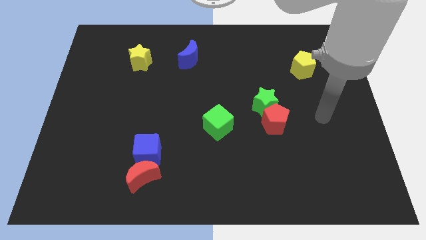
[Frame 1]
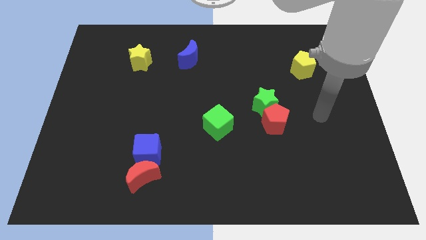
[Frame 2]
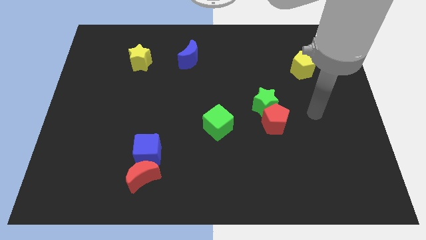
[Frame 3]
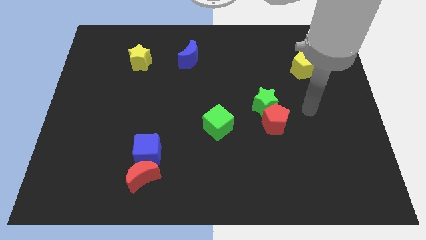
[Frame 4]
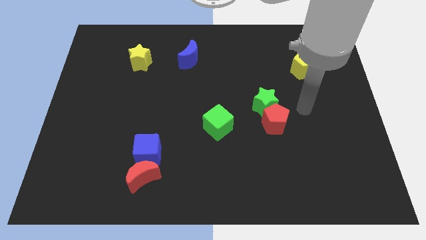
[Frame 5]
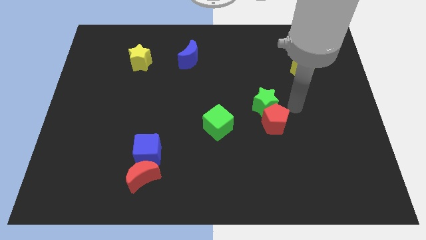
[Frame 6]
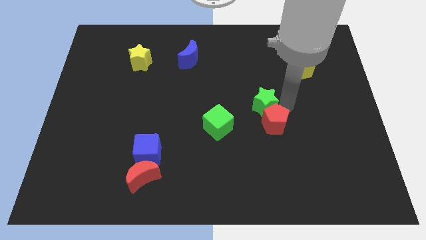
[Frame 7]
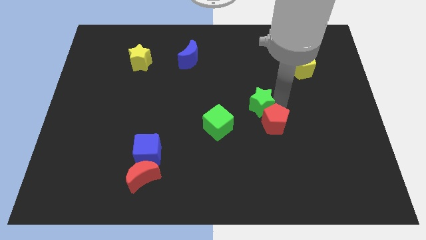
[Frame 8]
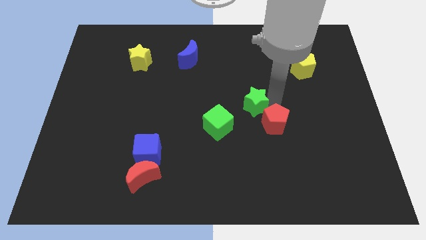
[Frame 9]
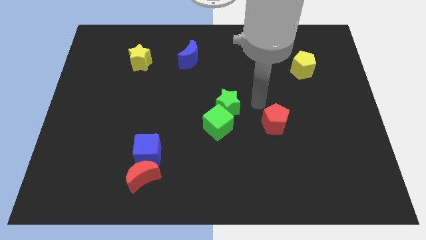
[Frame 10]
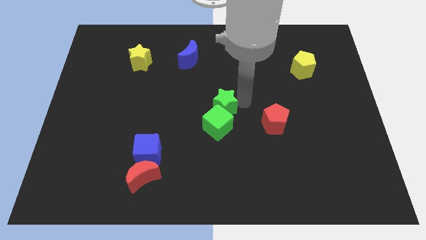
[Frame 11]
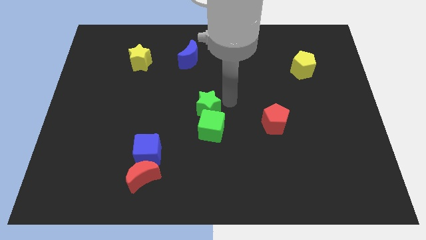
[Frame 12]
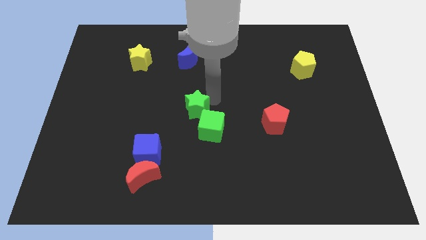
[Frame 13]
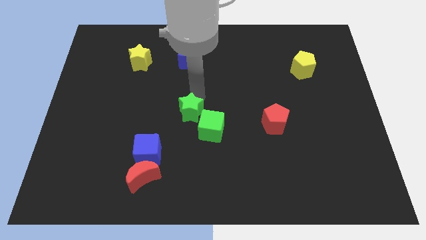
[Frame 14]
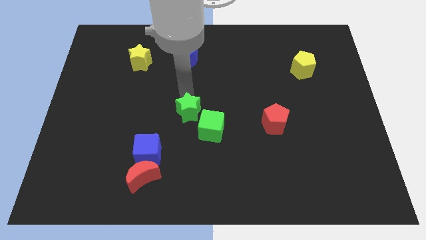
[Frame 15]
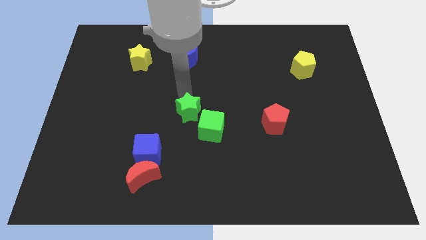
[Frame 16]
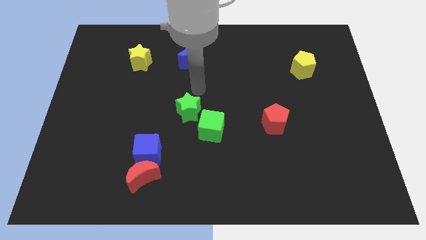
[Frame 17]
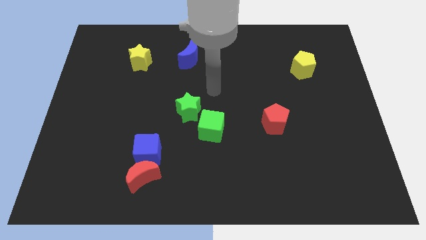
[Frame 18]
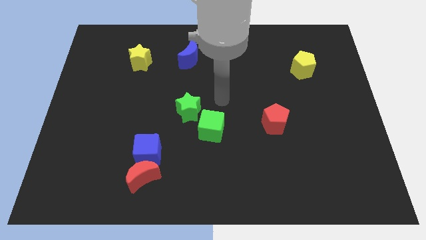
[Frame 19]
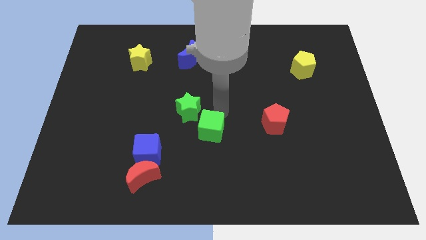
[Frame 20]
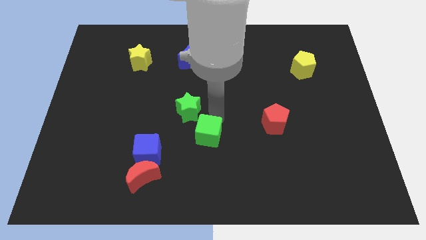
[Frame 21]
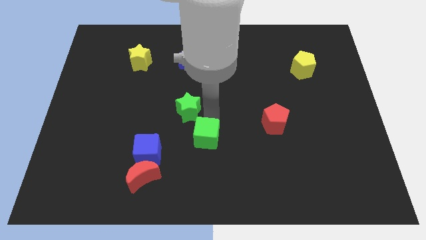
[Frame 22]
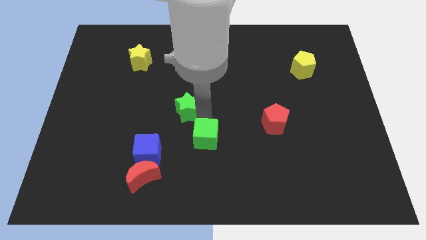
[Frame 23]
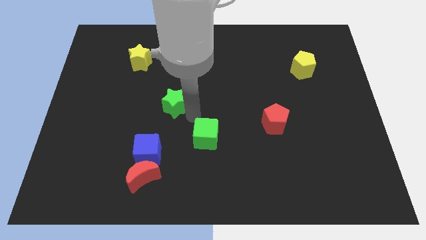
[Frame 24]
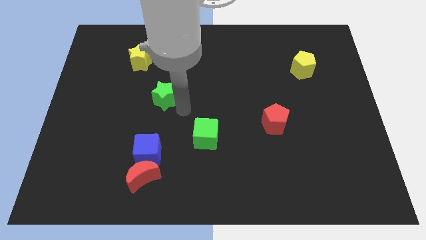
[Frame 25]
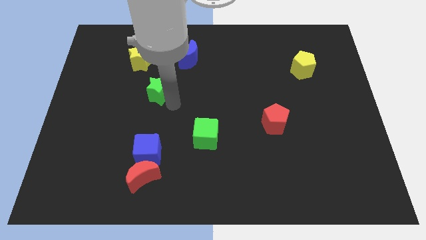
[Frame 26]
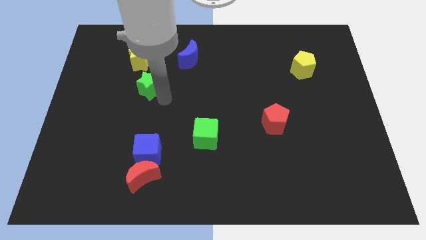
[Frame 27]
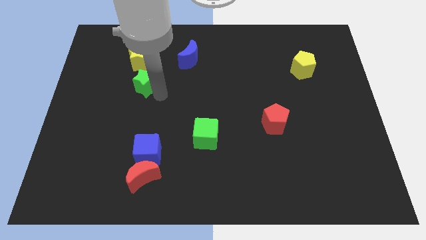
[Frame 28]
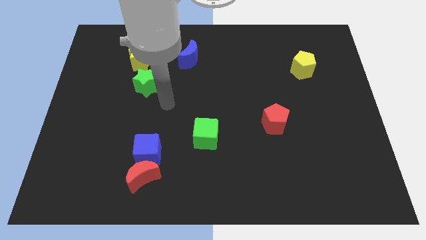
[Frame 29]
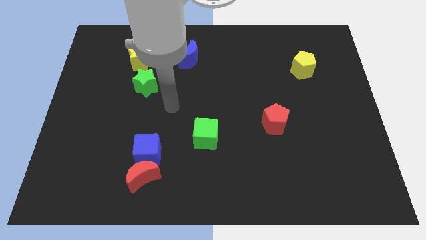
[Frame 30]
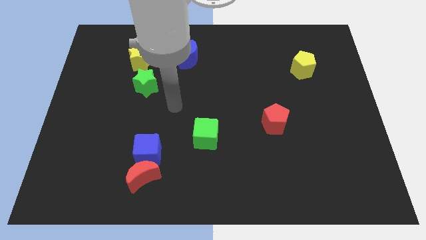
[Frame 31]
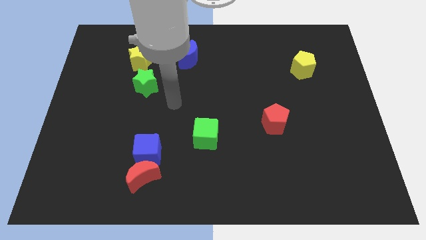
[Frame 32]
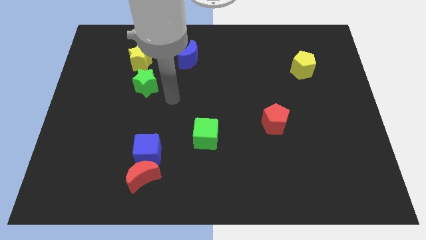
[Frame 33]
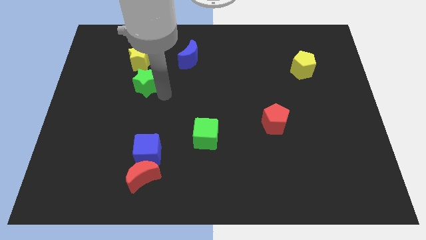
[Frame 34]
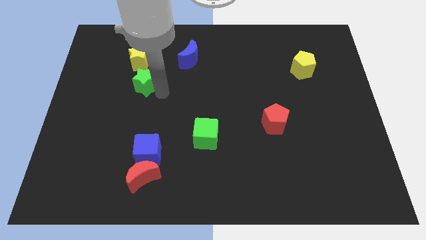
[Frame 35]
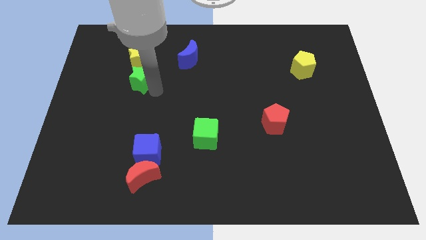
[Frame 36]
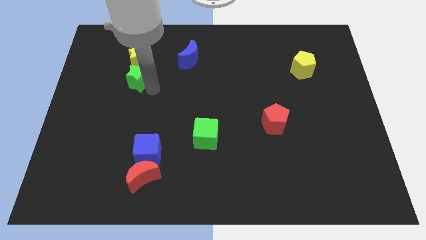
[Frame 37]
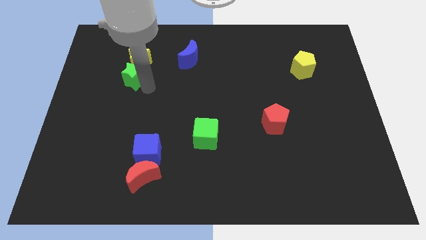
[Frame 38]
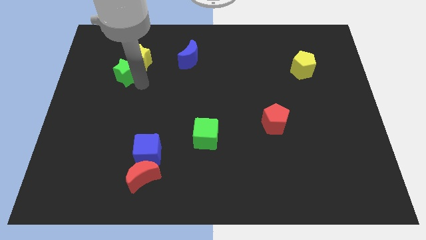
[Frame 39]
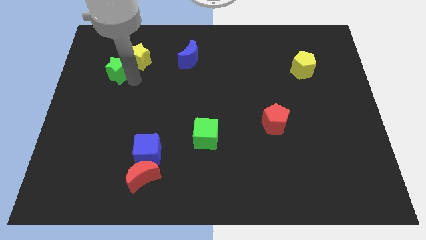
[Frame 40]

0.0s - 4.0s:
move green star close to the yellow star

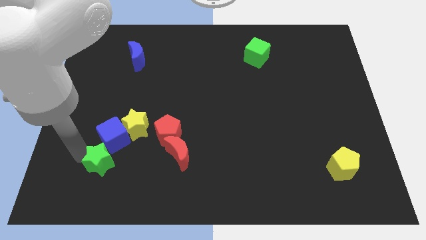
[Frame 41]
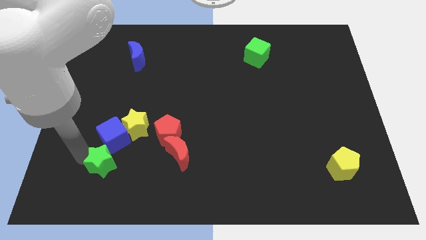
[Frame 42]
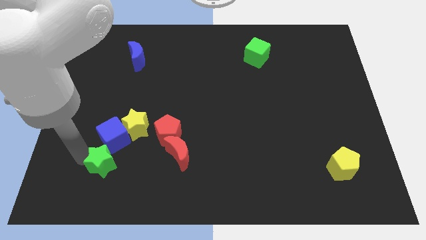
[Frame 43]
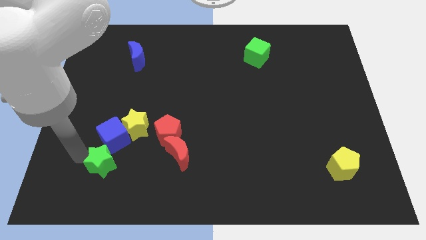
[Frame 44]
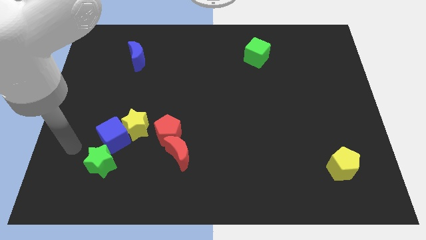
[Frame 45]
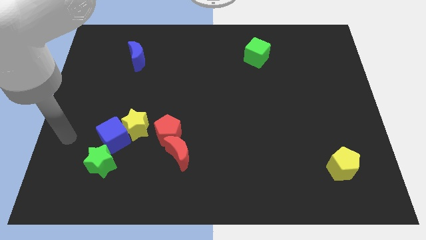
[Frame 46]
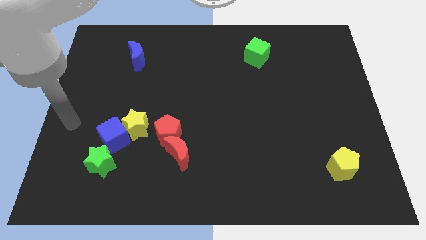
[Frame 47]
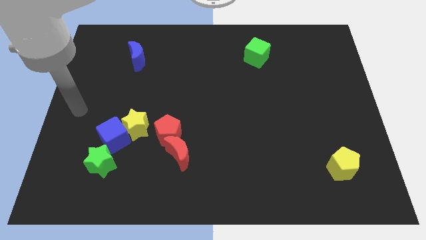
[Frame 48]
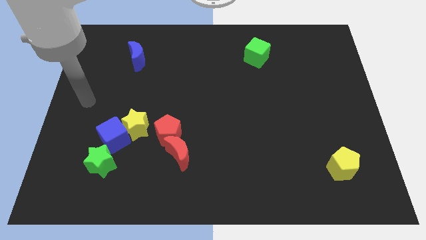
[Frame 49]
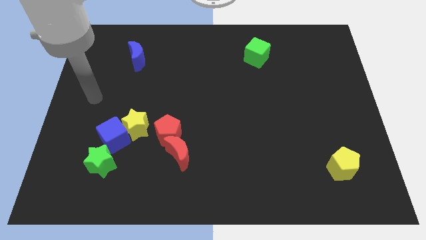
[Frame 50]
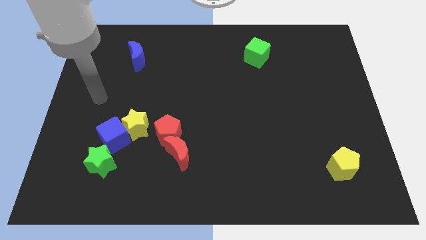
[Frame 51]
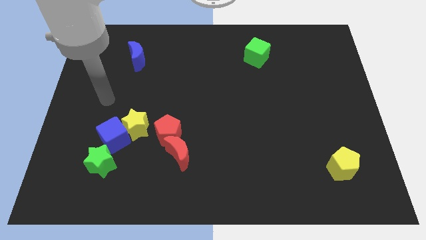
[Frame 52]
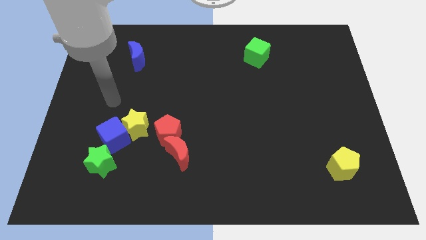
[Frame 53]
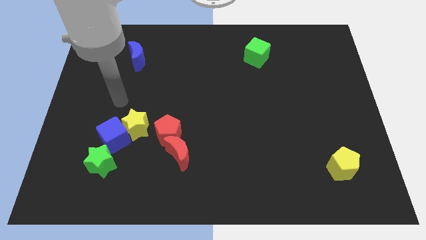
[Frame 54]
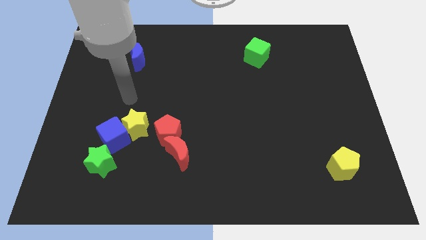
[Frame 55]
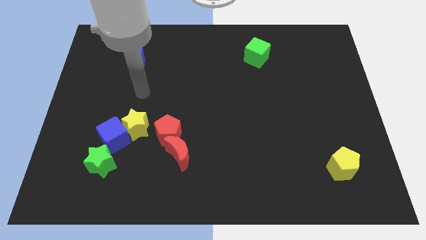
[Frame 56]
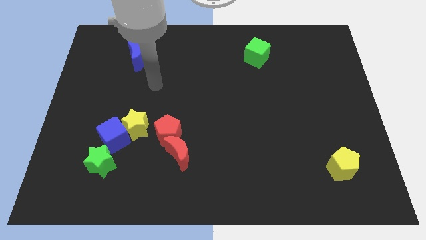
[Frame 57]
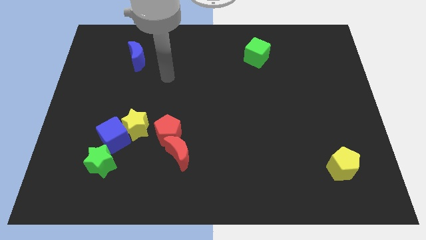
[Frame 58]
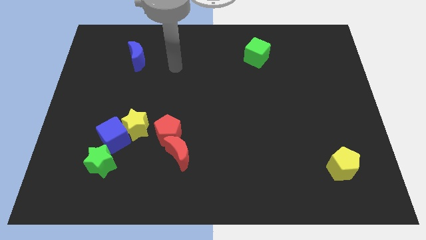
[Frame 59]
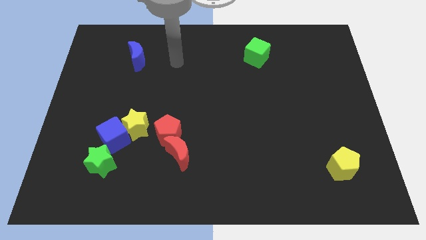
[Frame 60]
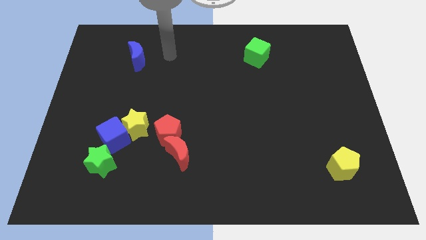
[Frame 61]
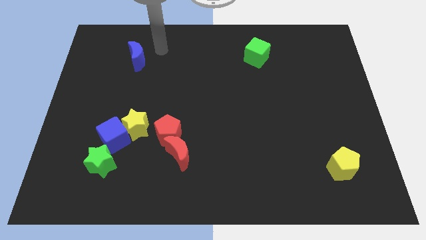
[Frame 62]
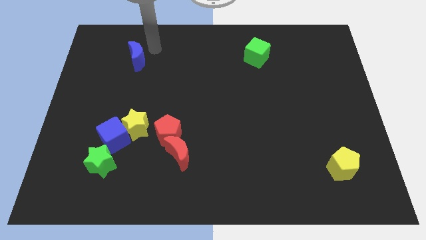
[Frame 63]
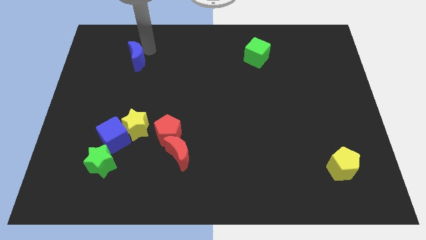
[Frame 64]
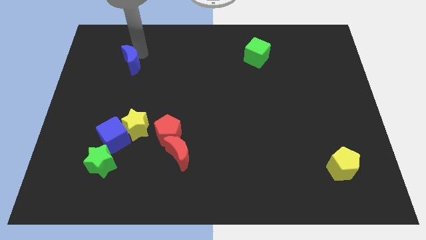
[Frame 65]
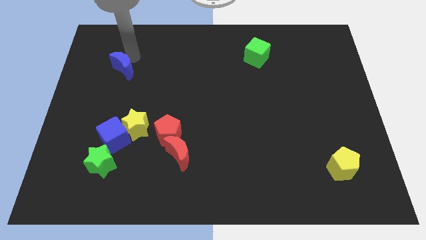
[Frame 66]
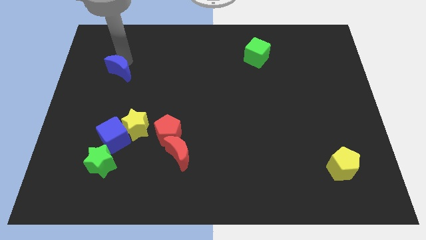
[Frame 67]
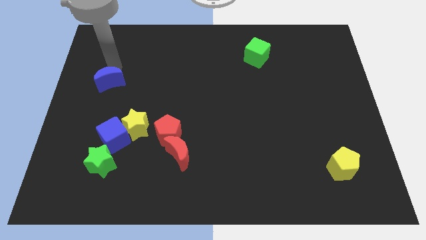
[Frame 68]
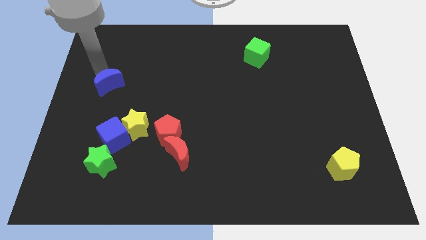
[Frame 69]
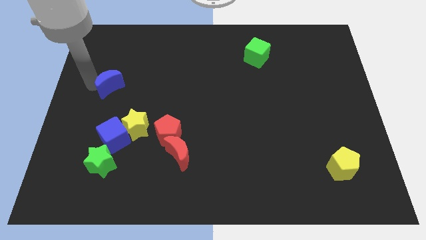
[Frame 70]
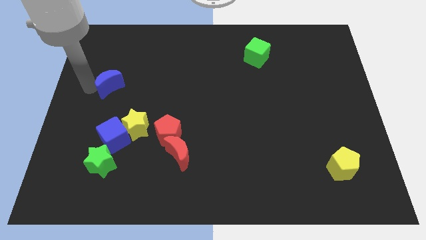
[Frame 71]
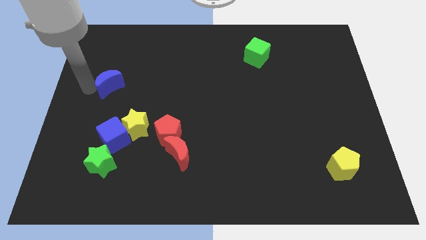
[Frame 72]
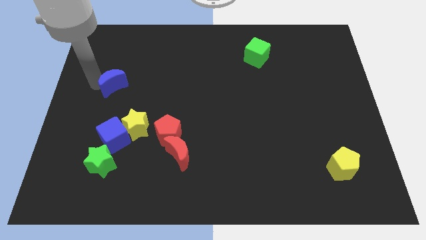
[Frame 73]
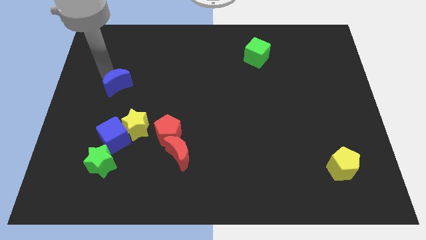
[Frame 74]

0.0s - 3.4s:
slide the blue moon vertically to the top of the yellow star

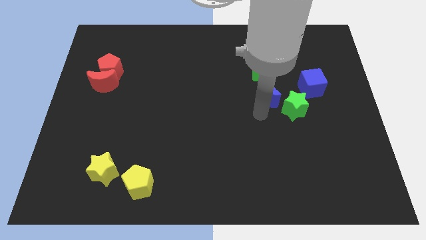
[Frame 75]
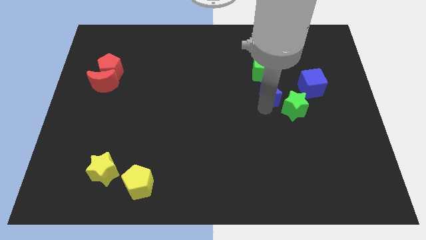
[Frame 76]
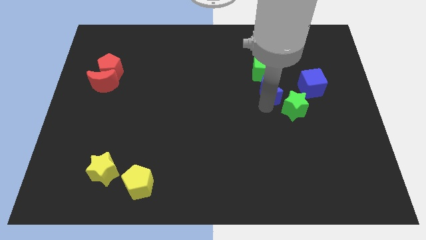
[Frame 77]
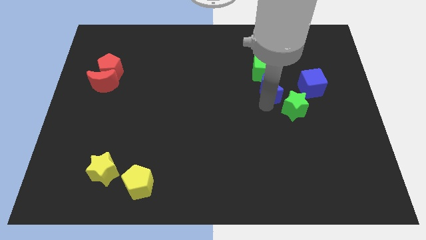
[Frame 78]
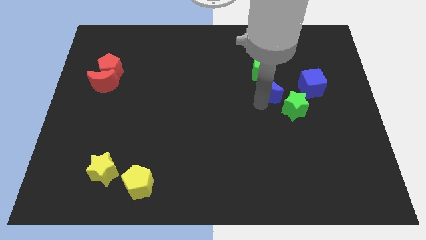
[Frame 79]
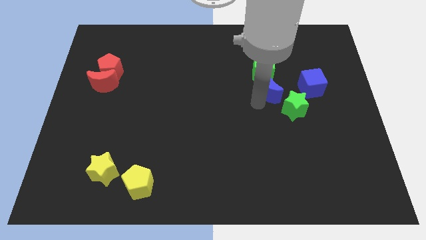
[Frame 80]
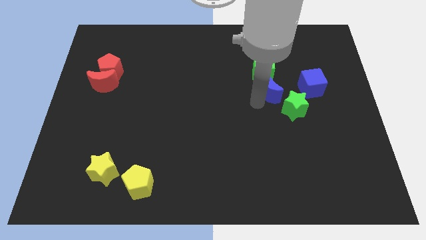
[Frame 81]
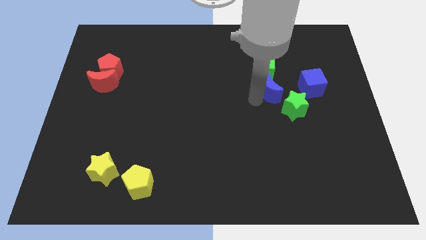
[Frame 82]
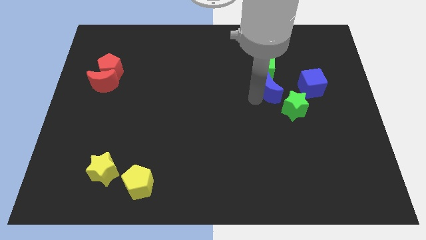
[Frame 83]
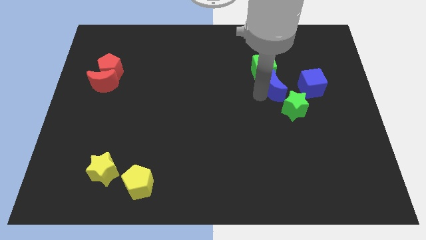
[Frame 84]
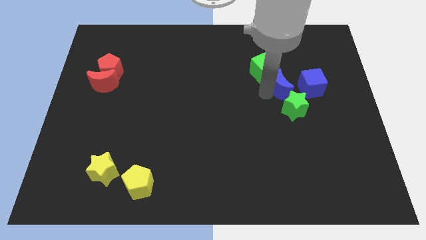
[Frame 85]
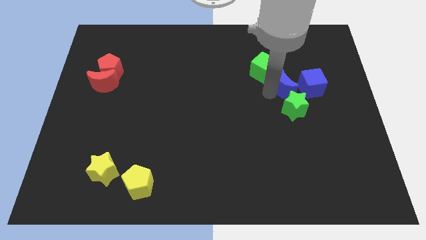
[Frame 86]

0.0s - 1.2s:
place blue moon in between green blocks

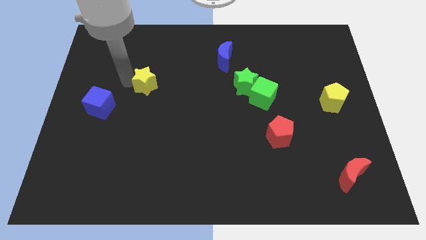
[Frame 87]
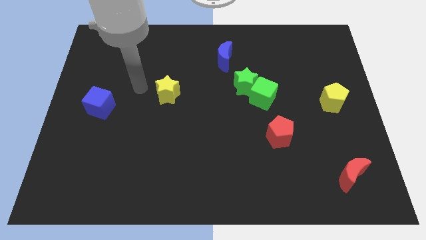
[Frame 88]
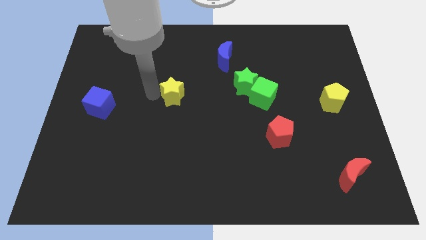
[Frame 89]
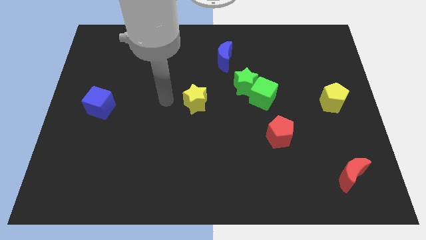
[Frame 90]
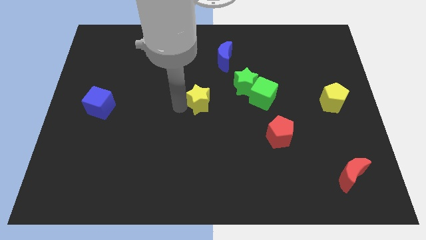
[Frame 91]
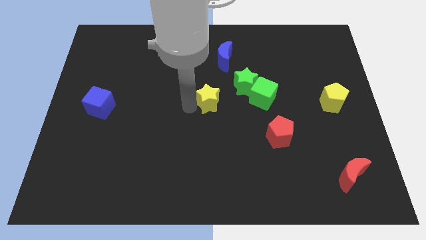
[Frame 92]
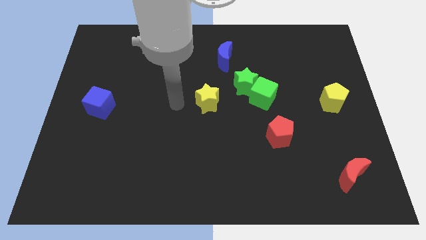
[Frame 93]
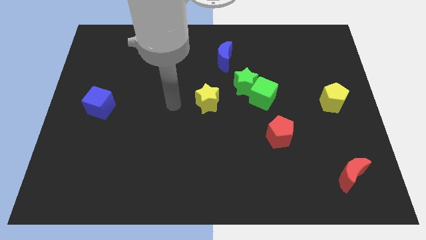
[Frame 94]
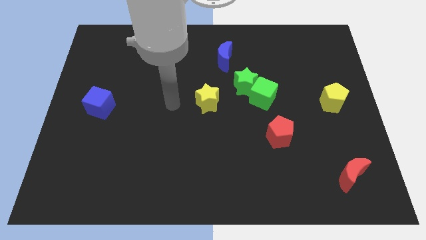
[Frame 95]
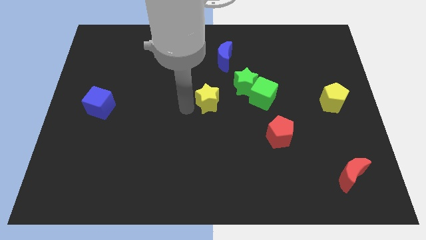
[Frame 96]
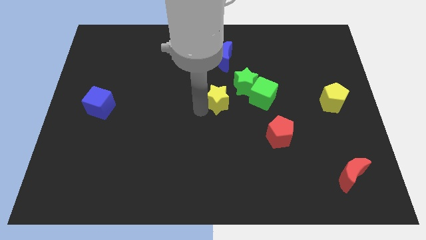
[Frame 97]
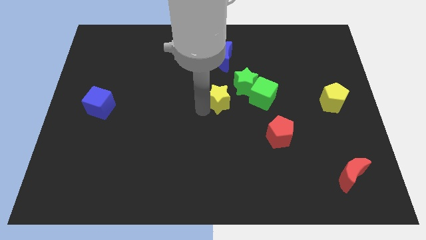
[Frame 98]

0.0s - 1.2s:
move the yellow star towards the center of the board
